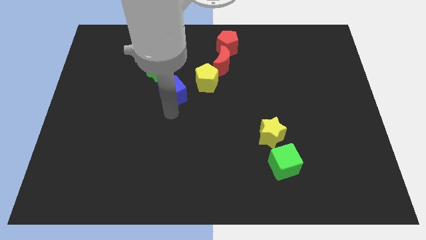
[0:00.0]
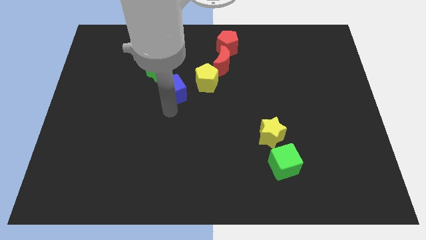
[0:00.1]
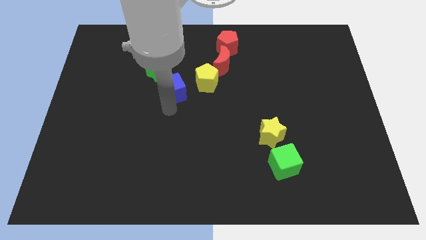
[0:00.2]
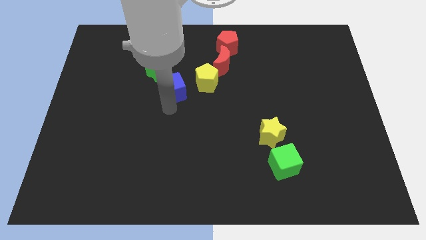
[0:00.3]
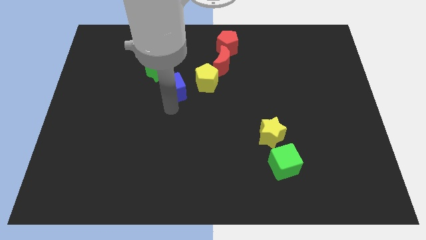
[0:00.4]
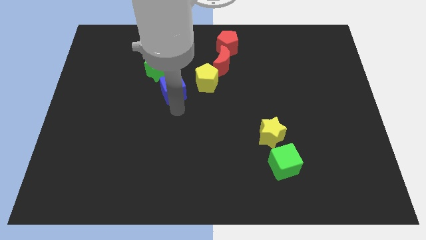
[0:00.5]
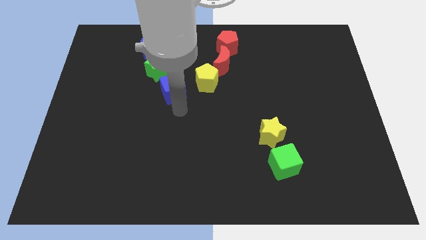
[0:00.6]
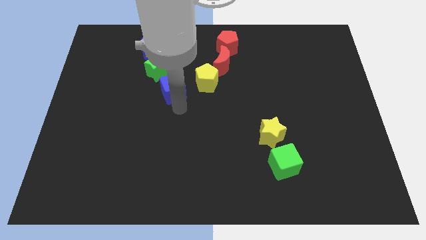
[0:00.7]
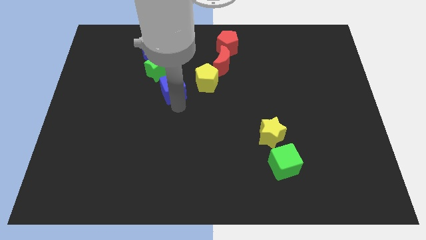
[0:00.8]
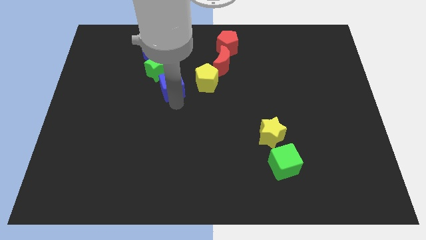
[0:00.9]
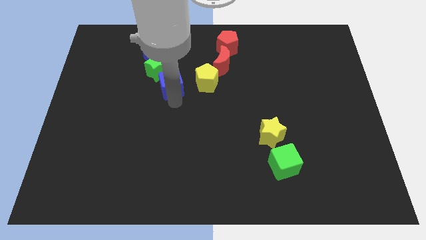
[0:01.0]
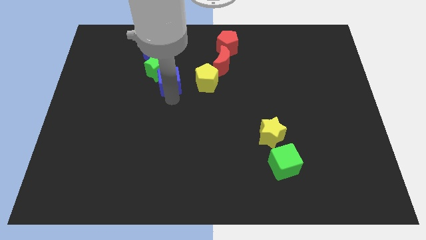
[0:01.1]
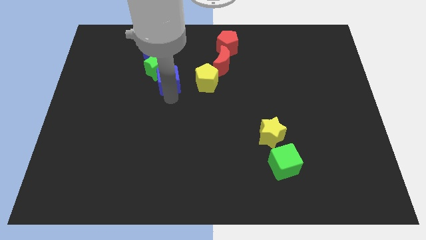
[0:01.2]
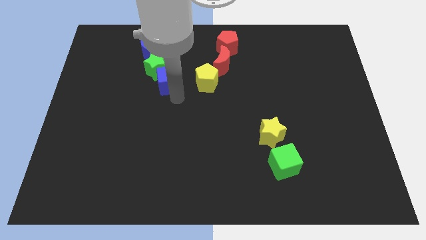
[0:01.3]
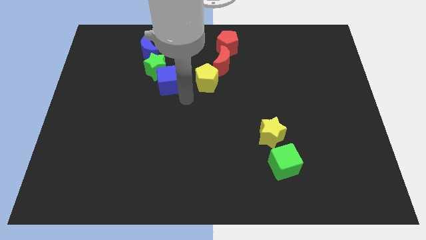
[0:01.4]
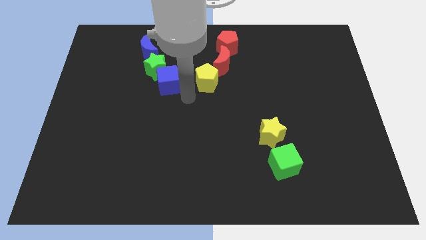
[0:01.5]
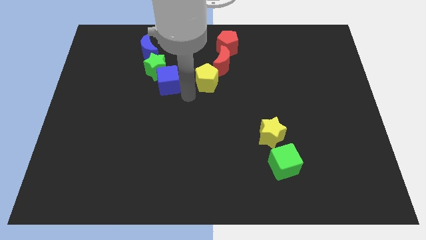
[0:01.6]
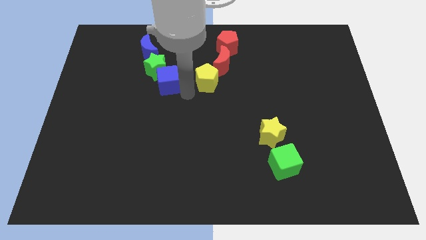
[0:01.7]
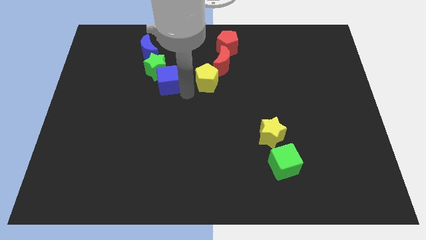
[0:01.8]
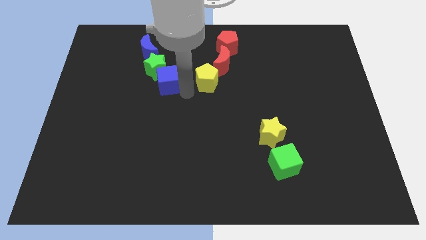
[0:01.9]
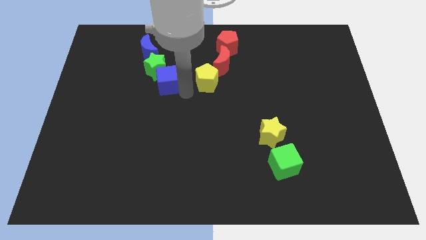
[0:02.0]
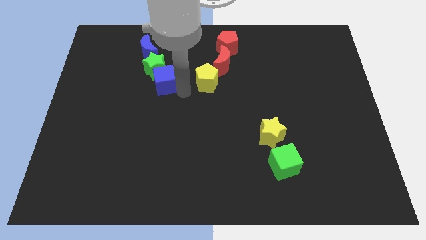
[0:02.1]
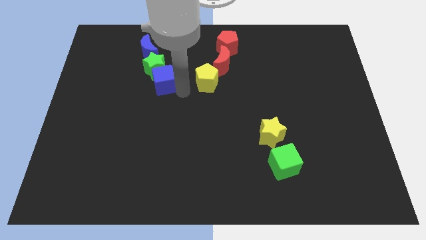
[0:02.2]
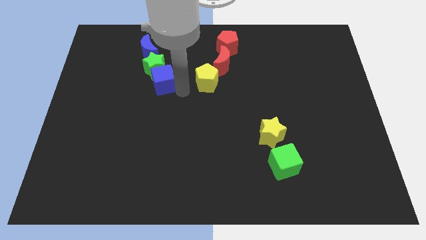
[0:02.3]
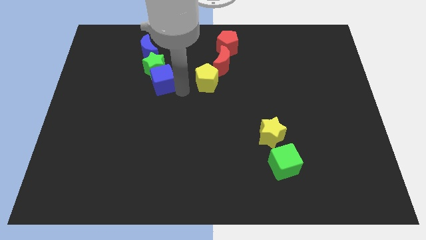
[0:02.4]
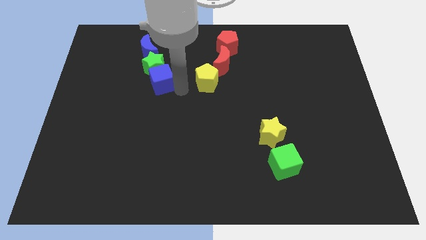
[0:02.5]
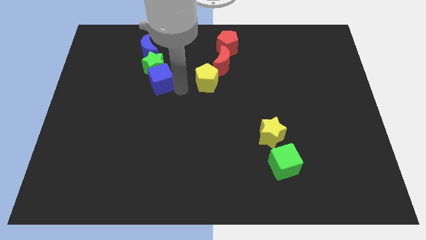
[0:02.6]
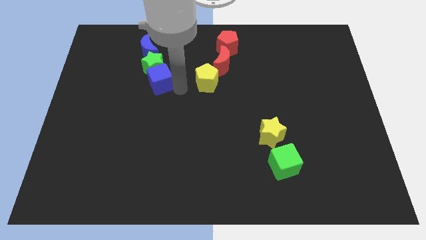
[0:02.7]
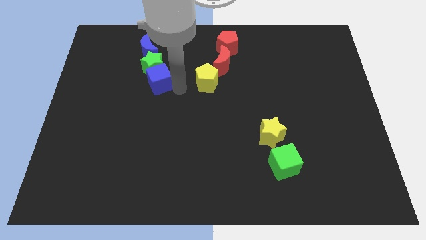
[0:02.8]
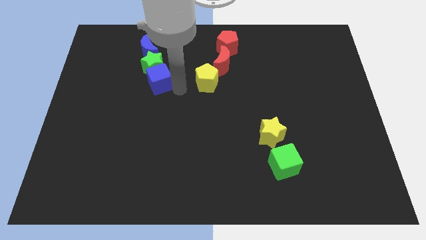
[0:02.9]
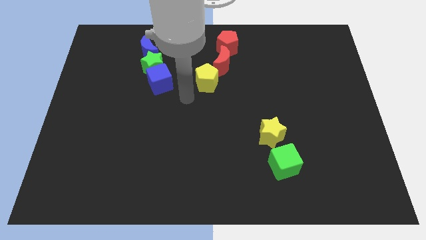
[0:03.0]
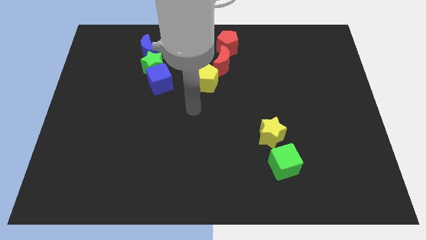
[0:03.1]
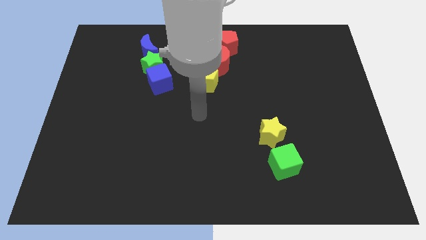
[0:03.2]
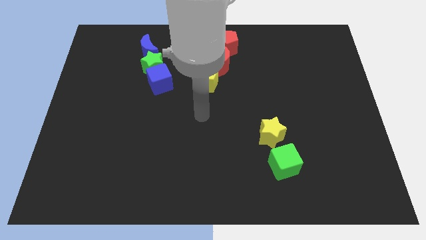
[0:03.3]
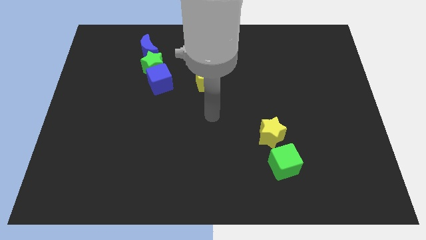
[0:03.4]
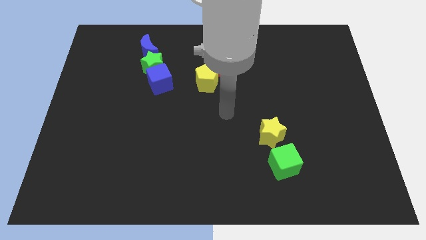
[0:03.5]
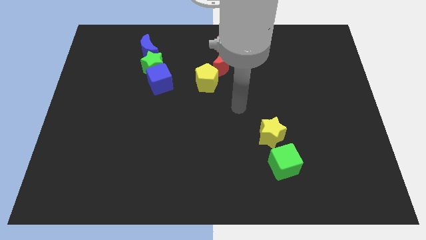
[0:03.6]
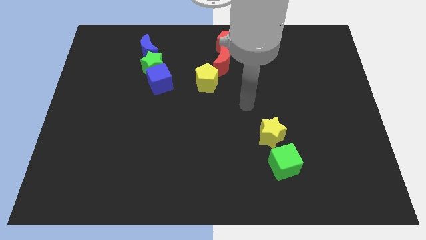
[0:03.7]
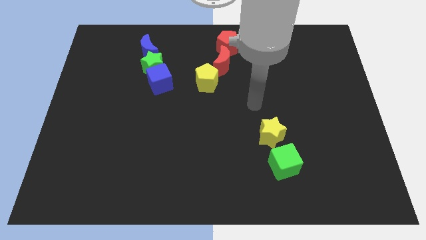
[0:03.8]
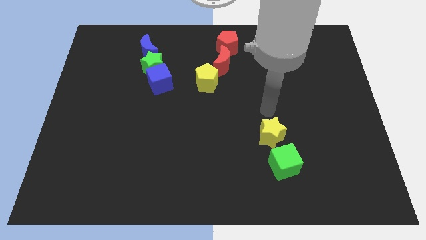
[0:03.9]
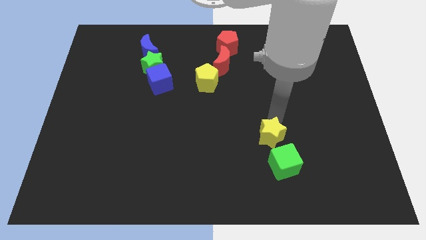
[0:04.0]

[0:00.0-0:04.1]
move the blue cube to the left side of the yellow pentagon

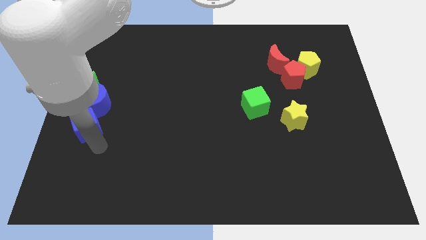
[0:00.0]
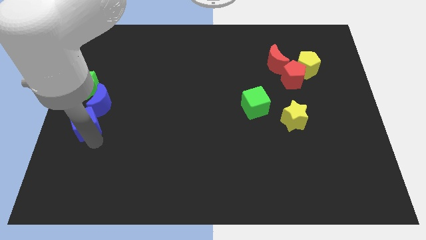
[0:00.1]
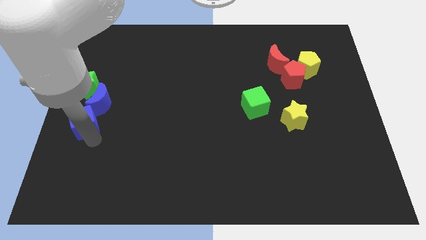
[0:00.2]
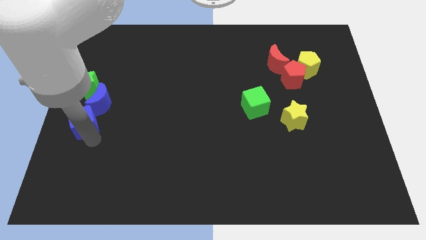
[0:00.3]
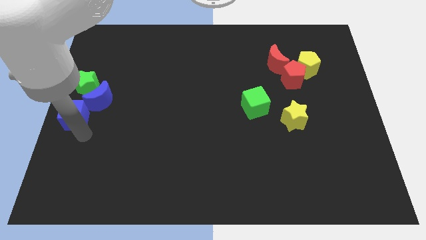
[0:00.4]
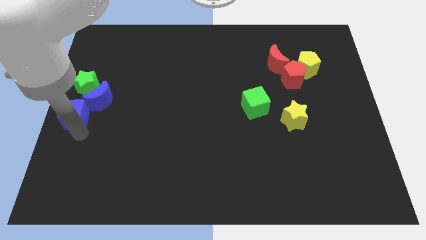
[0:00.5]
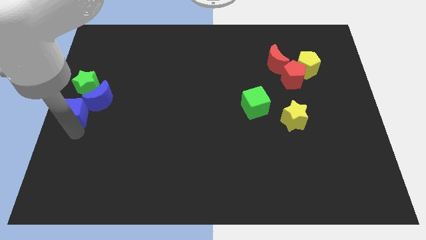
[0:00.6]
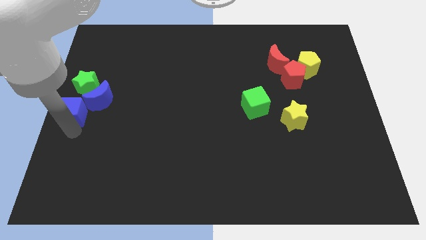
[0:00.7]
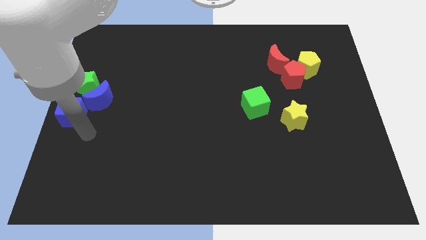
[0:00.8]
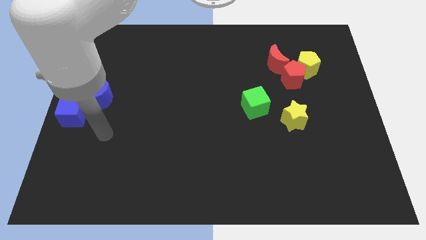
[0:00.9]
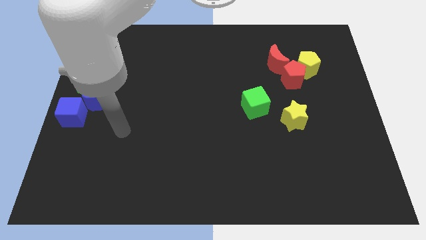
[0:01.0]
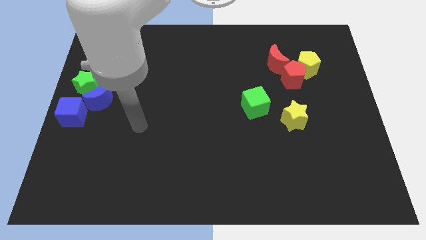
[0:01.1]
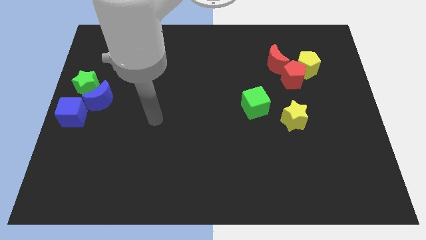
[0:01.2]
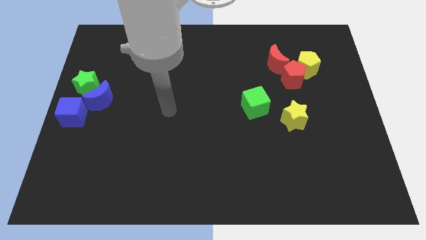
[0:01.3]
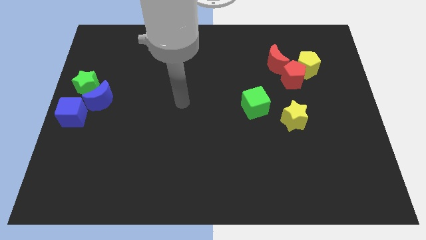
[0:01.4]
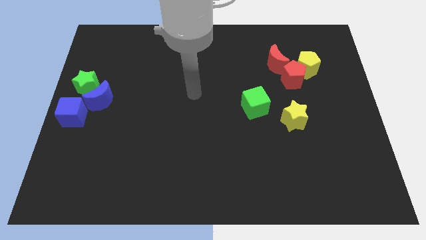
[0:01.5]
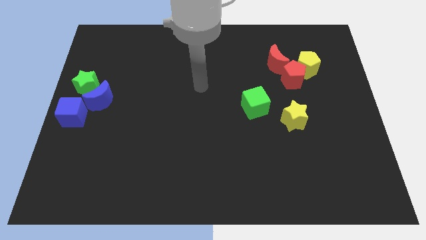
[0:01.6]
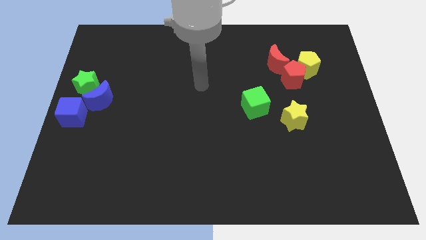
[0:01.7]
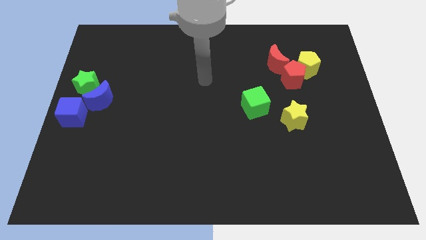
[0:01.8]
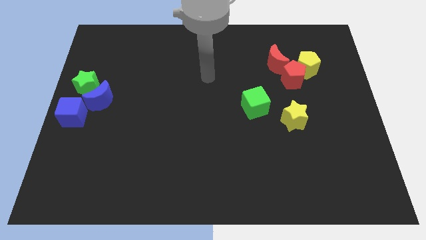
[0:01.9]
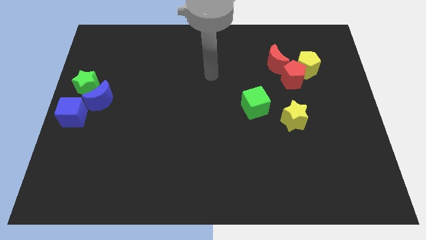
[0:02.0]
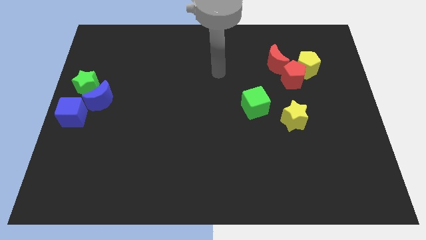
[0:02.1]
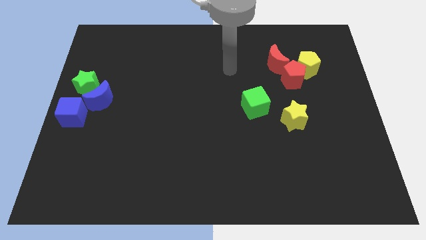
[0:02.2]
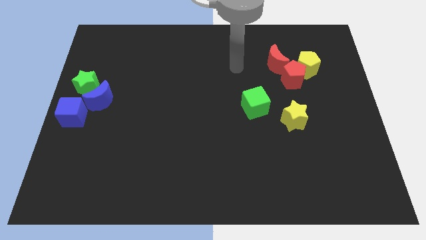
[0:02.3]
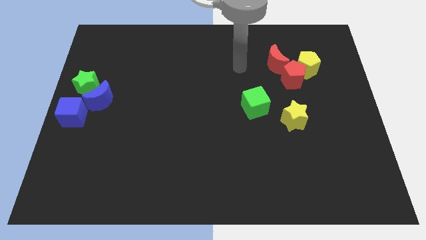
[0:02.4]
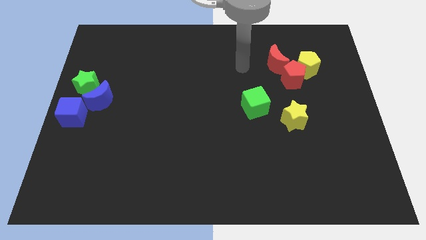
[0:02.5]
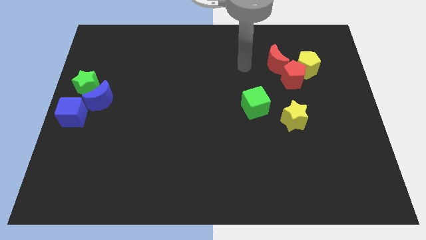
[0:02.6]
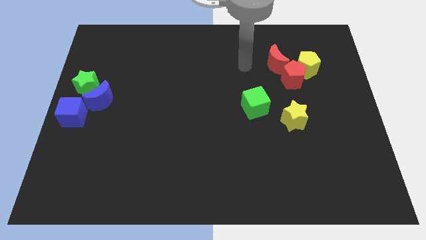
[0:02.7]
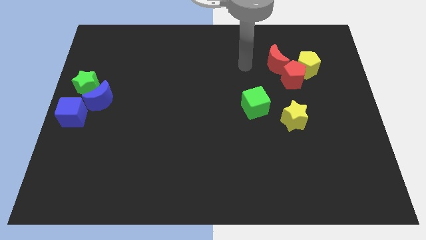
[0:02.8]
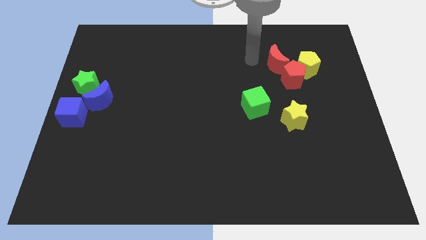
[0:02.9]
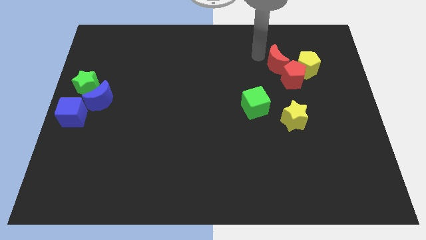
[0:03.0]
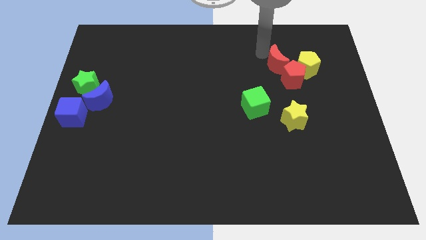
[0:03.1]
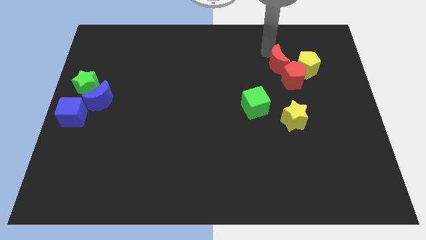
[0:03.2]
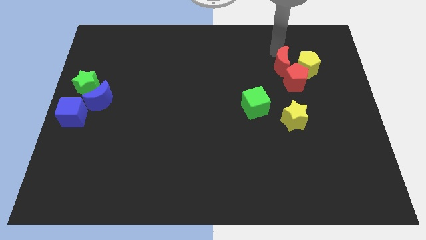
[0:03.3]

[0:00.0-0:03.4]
touch the top of the red crescent

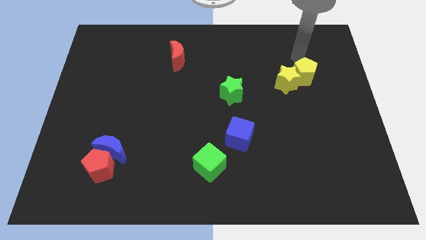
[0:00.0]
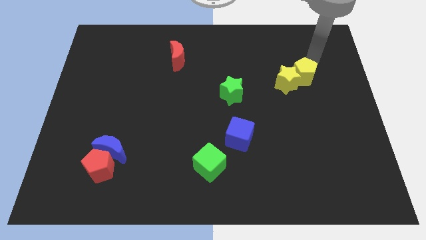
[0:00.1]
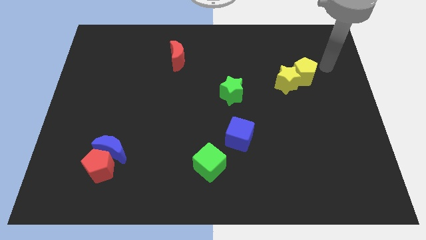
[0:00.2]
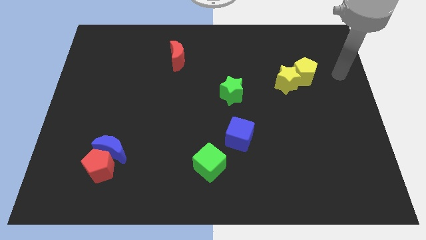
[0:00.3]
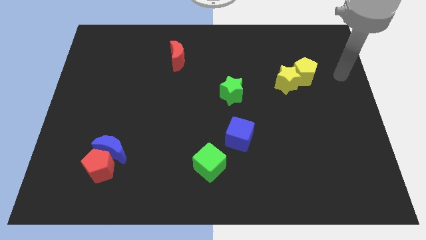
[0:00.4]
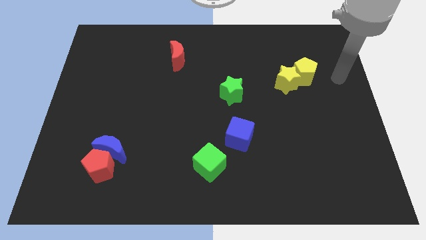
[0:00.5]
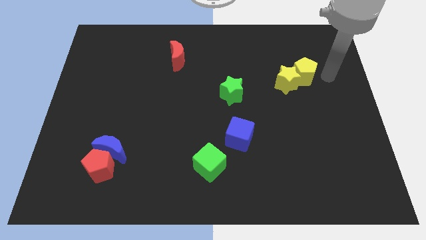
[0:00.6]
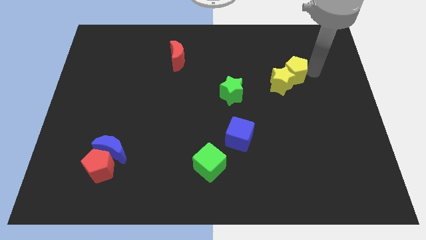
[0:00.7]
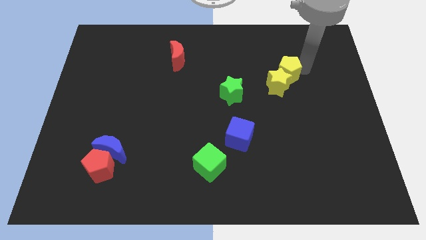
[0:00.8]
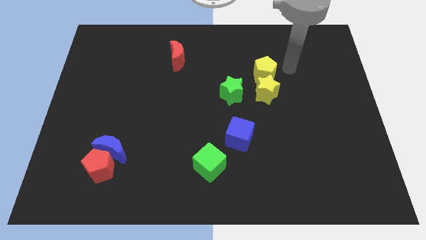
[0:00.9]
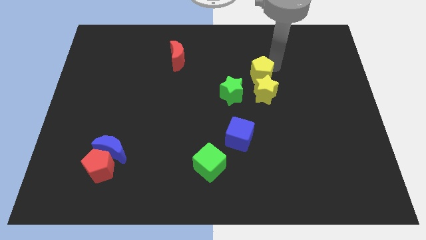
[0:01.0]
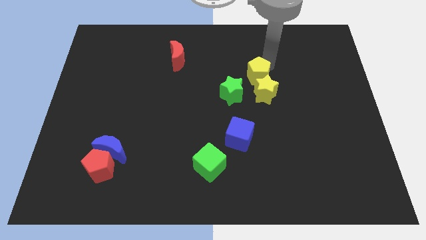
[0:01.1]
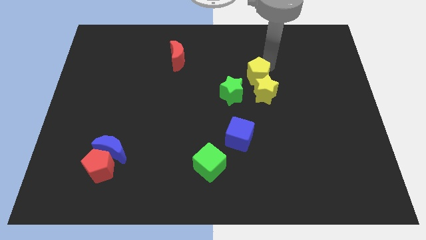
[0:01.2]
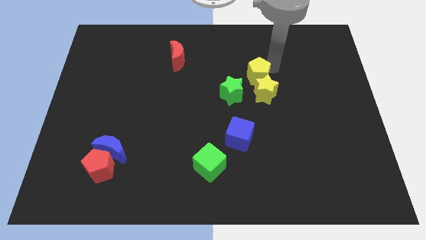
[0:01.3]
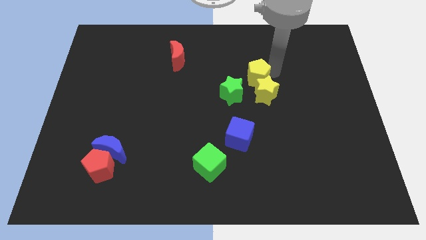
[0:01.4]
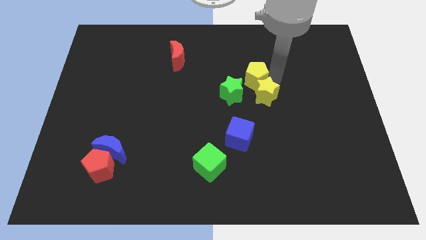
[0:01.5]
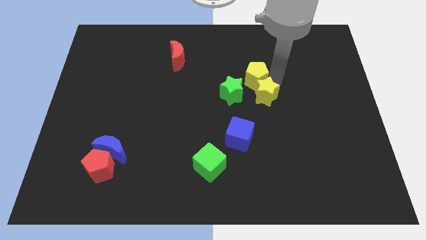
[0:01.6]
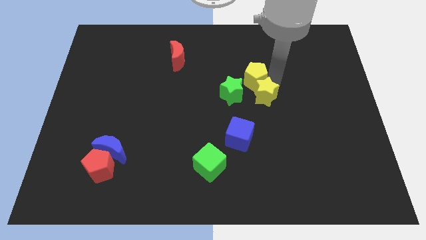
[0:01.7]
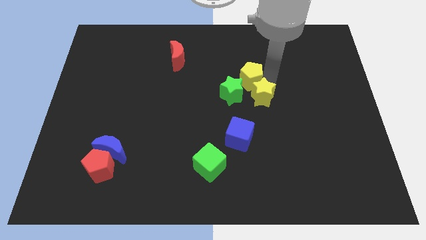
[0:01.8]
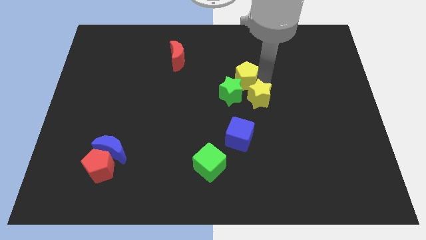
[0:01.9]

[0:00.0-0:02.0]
make a triangle out of green star and the yellow blocks
